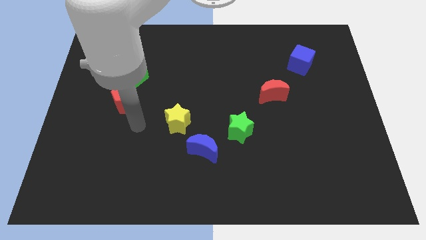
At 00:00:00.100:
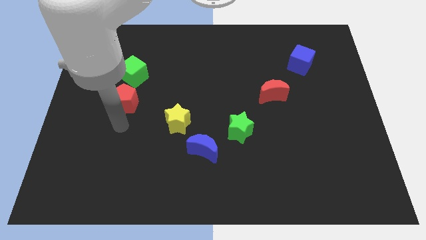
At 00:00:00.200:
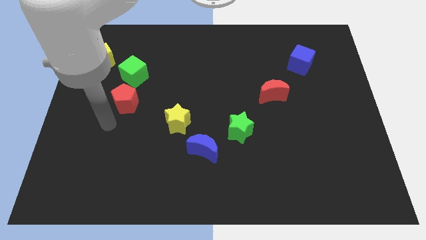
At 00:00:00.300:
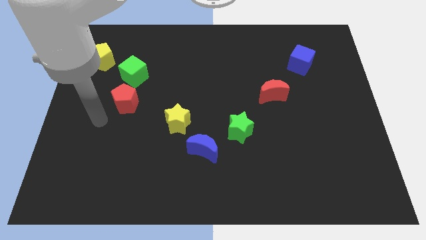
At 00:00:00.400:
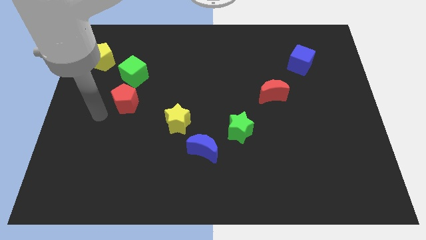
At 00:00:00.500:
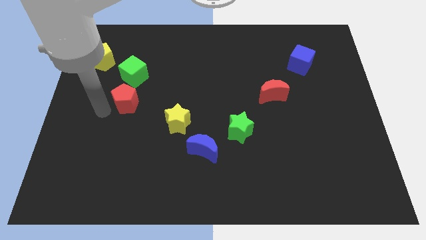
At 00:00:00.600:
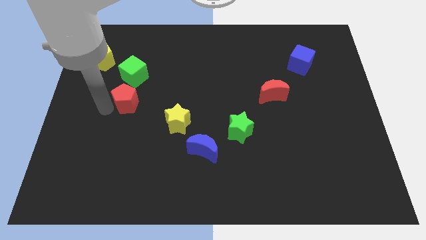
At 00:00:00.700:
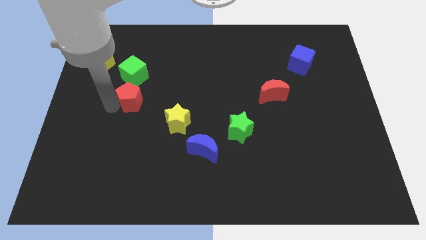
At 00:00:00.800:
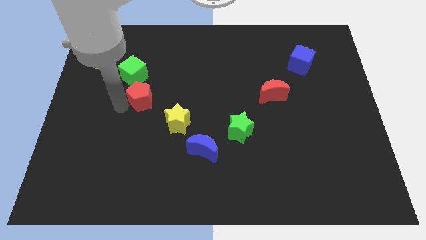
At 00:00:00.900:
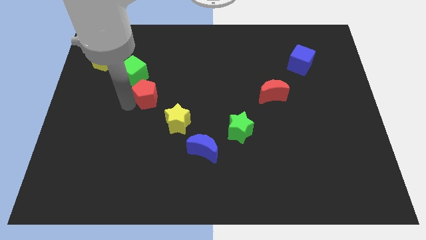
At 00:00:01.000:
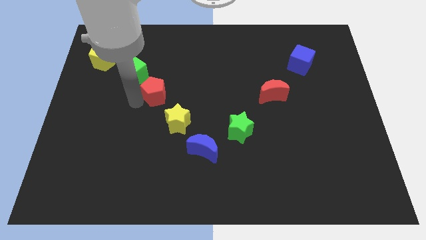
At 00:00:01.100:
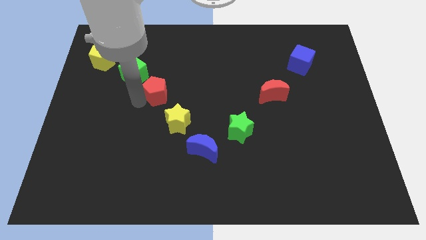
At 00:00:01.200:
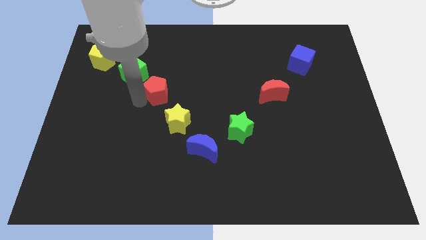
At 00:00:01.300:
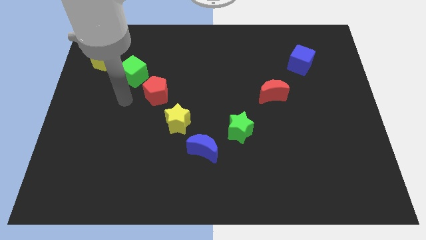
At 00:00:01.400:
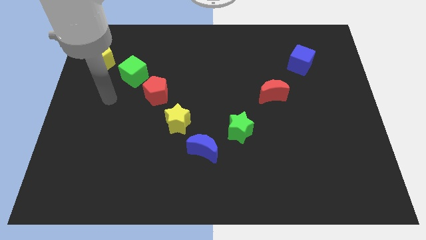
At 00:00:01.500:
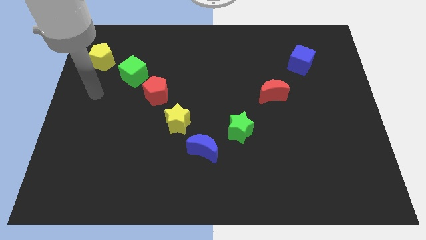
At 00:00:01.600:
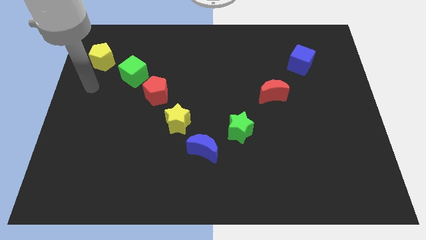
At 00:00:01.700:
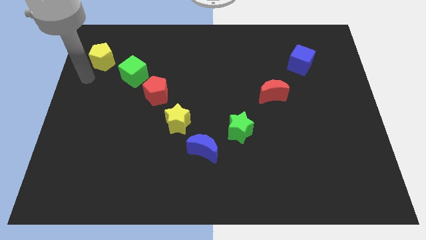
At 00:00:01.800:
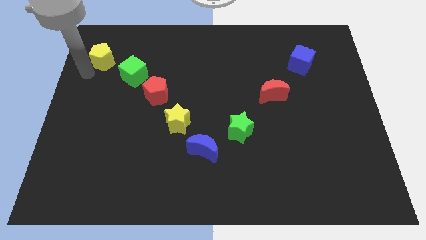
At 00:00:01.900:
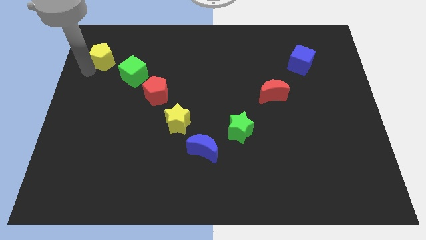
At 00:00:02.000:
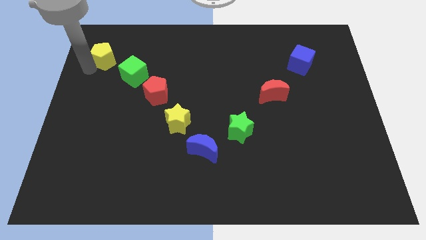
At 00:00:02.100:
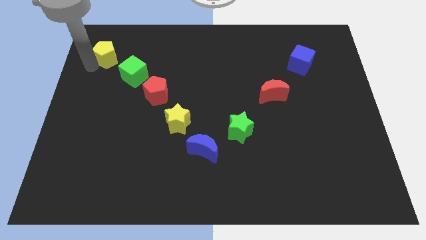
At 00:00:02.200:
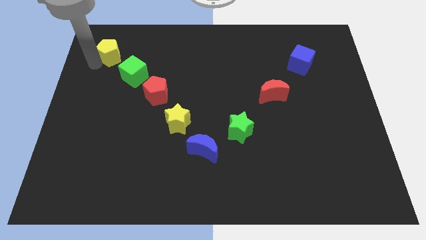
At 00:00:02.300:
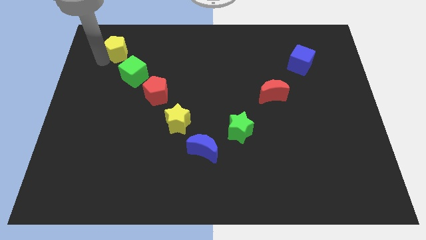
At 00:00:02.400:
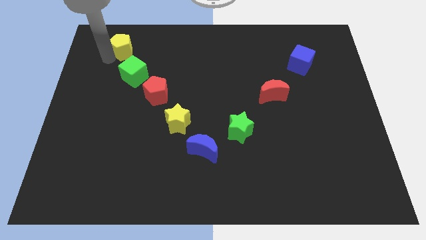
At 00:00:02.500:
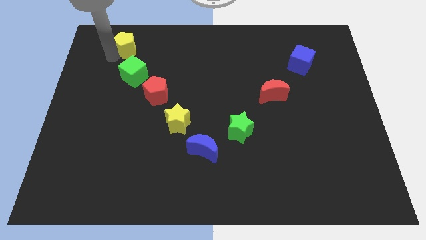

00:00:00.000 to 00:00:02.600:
push red pentagon below green cube

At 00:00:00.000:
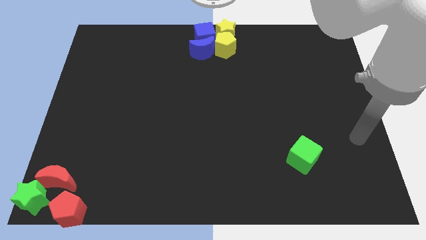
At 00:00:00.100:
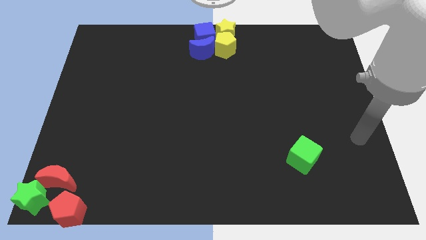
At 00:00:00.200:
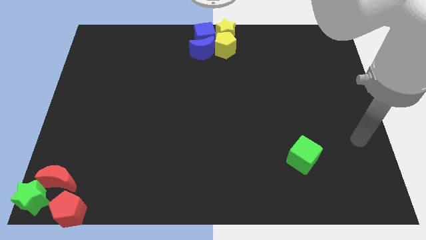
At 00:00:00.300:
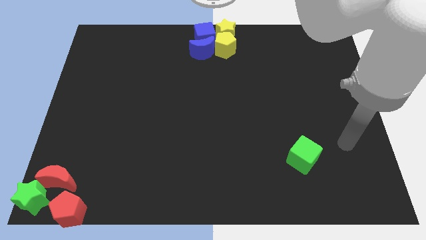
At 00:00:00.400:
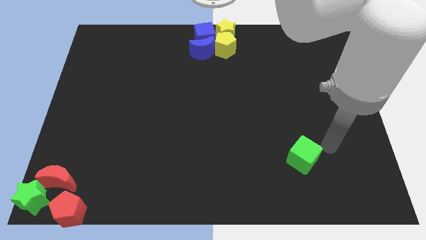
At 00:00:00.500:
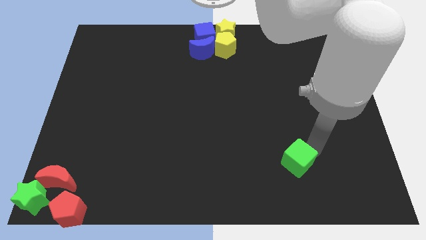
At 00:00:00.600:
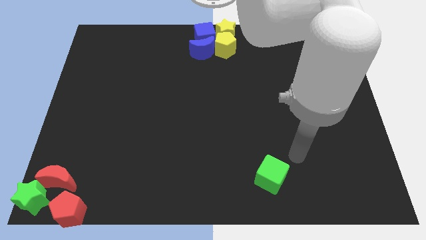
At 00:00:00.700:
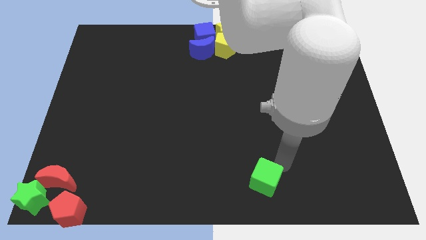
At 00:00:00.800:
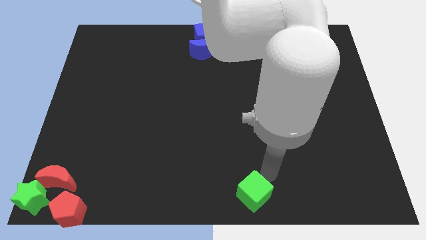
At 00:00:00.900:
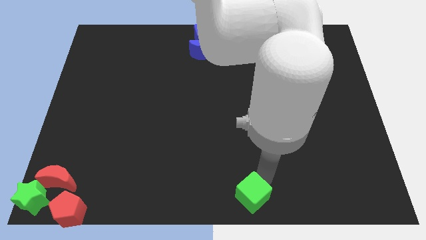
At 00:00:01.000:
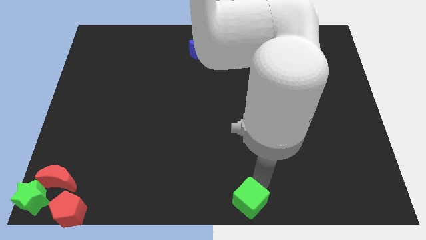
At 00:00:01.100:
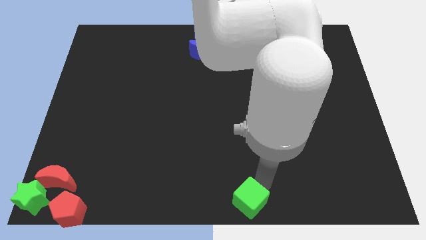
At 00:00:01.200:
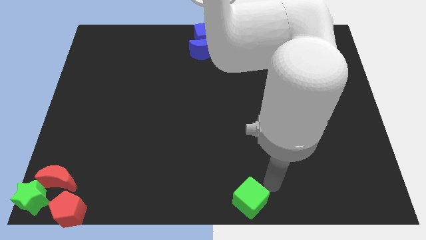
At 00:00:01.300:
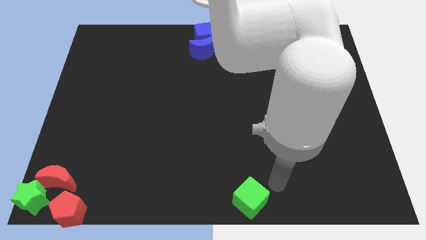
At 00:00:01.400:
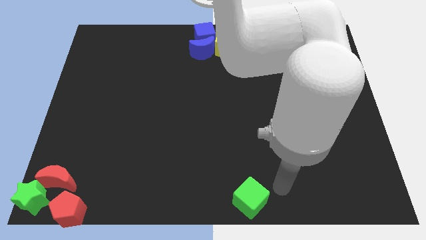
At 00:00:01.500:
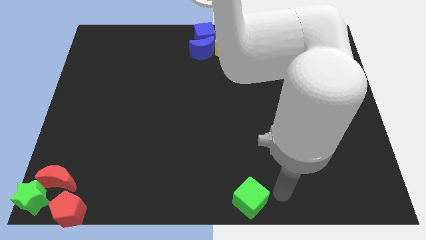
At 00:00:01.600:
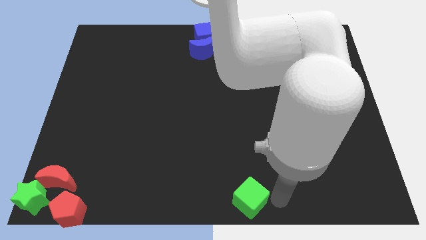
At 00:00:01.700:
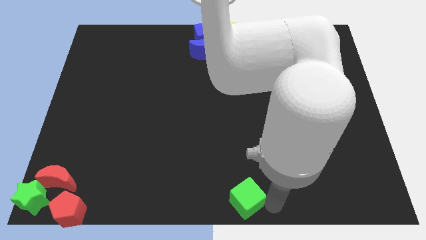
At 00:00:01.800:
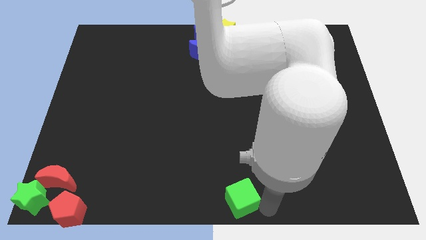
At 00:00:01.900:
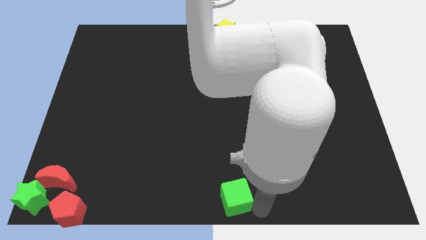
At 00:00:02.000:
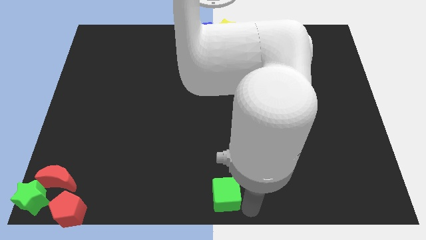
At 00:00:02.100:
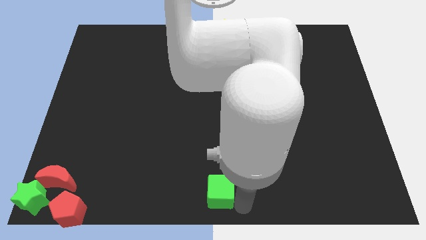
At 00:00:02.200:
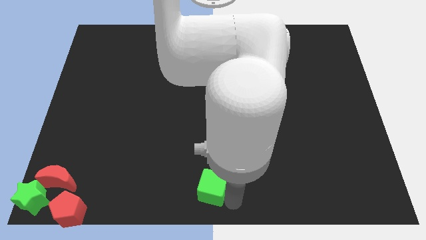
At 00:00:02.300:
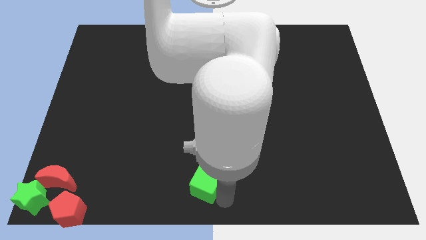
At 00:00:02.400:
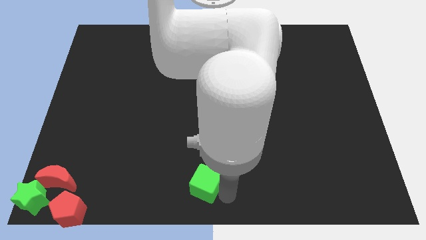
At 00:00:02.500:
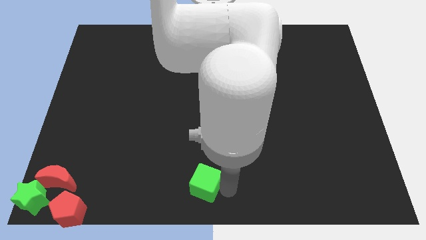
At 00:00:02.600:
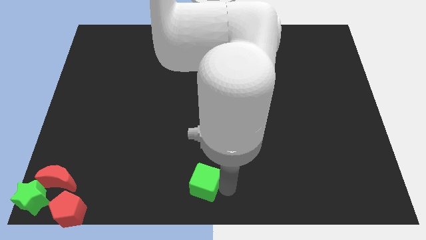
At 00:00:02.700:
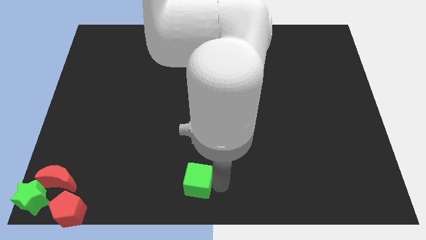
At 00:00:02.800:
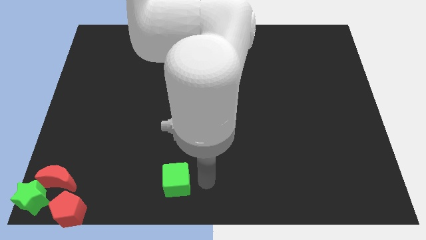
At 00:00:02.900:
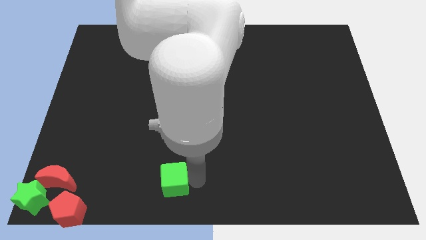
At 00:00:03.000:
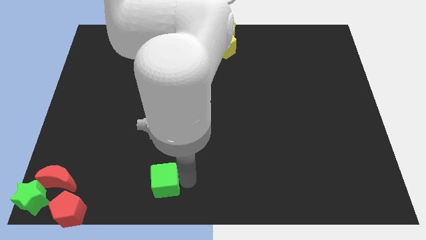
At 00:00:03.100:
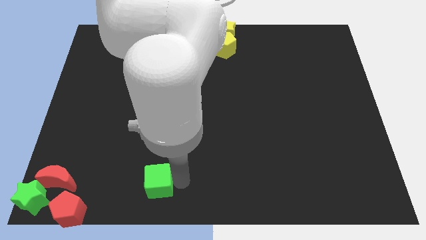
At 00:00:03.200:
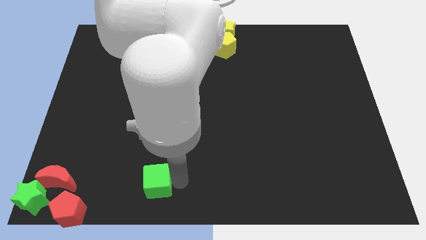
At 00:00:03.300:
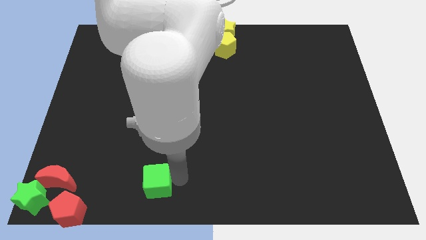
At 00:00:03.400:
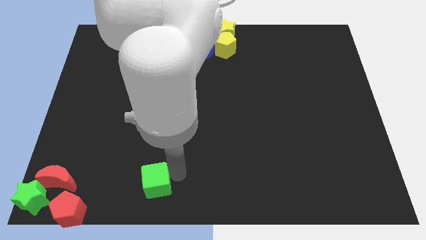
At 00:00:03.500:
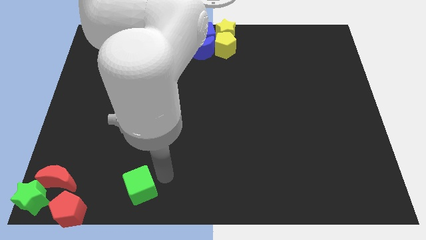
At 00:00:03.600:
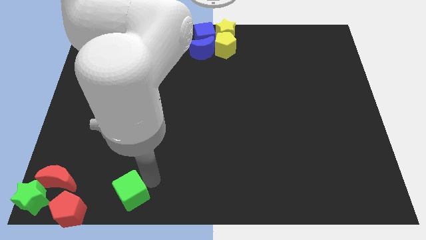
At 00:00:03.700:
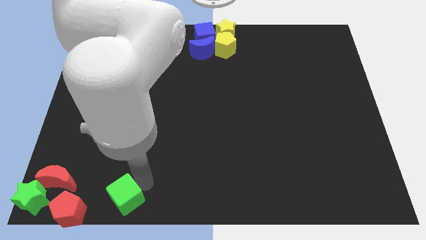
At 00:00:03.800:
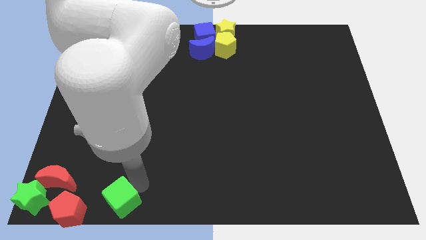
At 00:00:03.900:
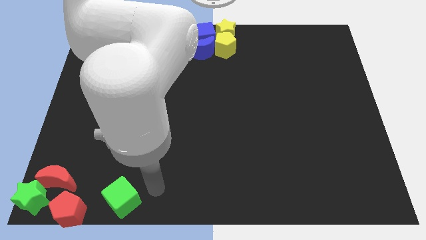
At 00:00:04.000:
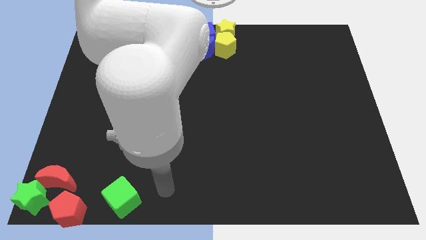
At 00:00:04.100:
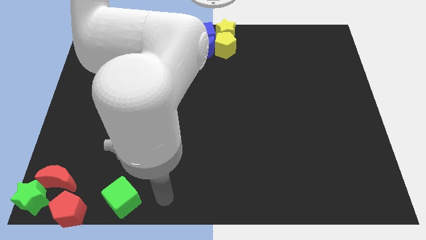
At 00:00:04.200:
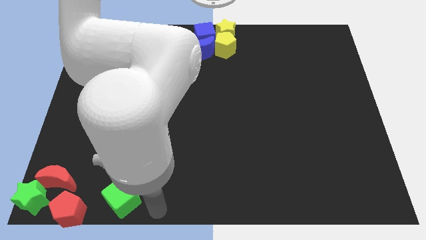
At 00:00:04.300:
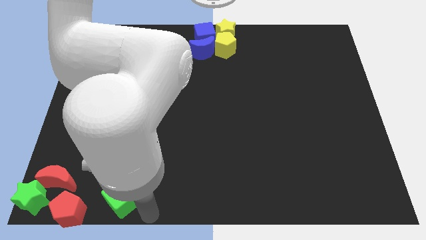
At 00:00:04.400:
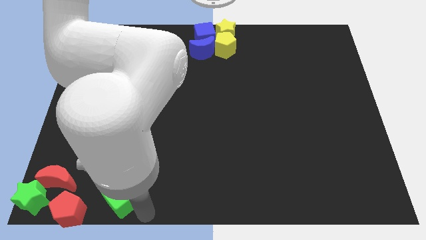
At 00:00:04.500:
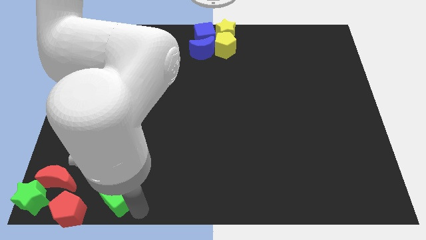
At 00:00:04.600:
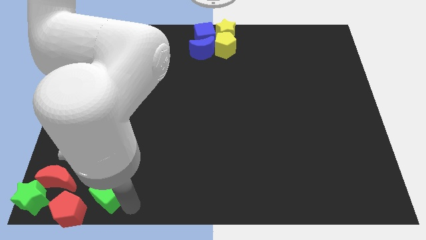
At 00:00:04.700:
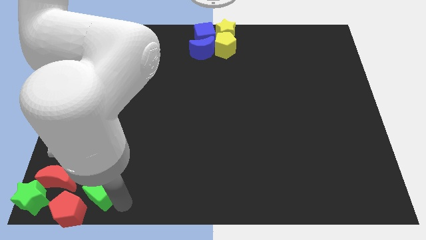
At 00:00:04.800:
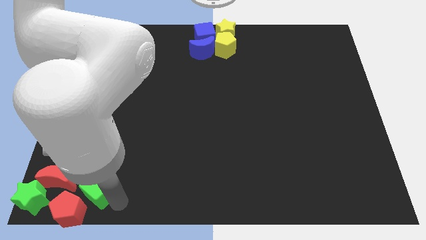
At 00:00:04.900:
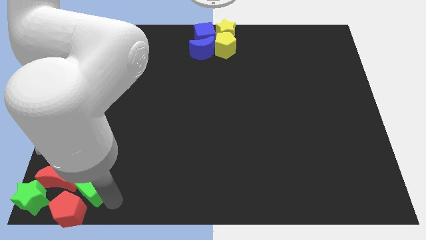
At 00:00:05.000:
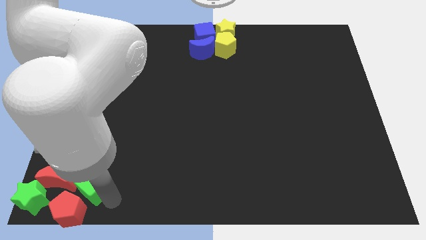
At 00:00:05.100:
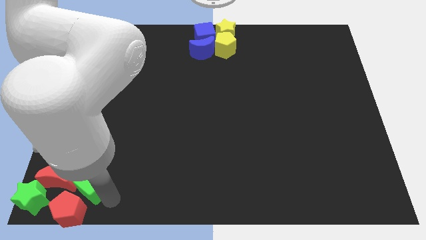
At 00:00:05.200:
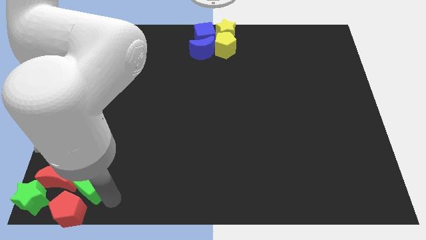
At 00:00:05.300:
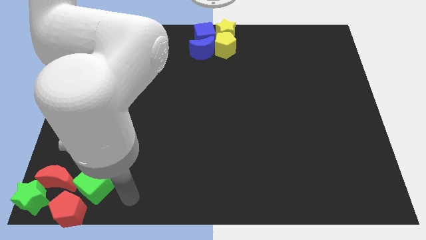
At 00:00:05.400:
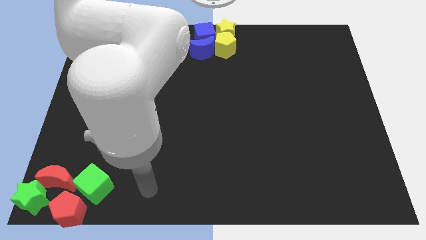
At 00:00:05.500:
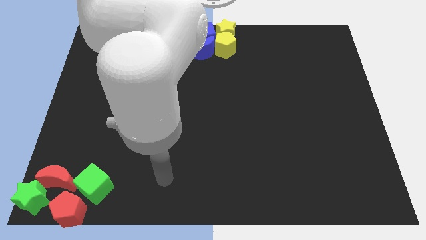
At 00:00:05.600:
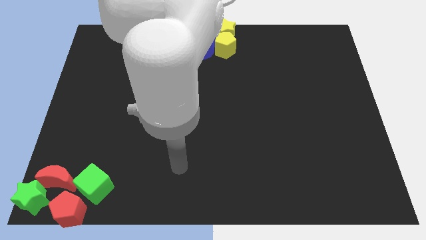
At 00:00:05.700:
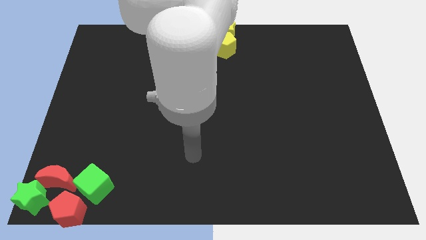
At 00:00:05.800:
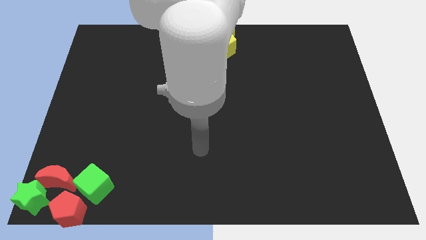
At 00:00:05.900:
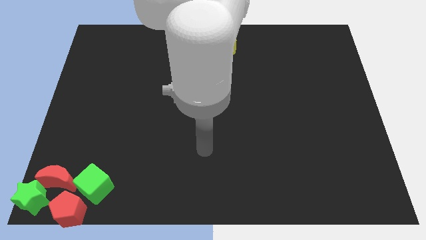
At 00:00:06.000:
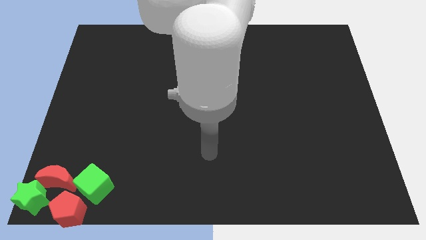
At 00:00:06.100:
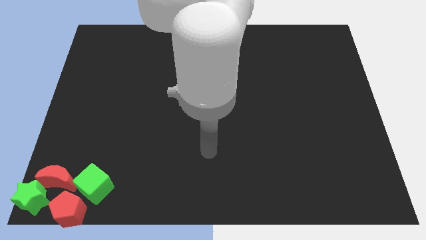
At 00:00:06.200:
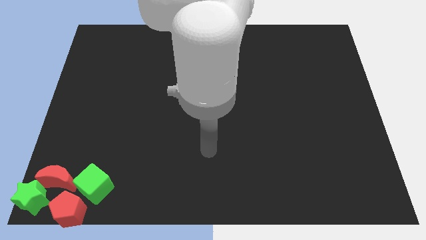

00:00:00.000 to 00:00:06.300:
push the green cube to the right of red crescent
